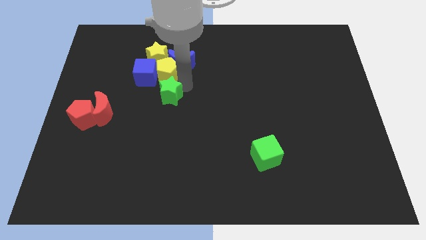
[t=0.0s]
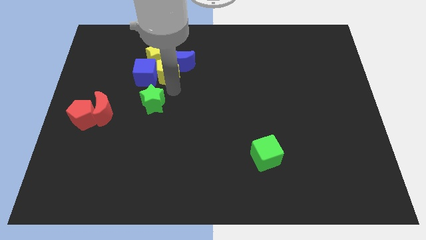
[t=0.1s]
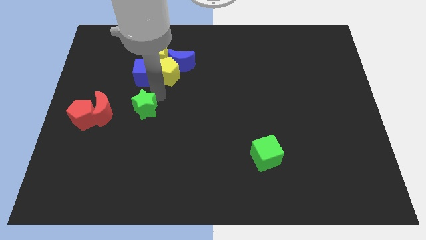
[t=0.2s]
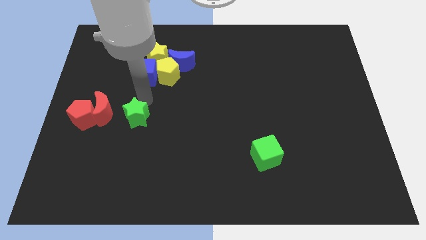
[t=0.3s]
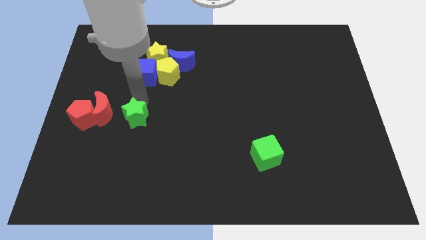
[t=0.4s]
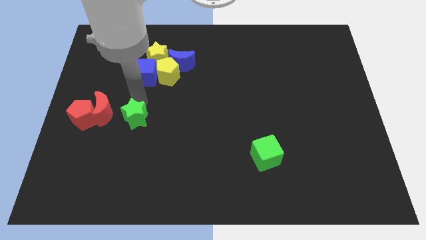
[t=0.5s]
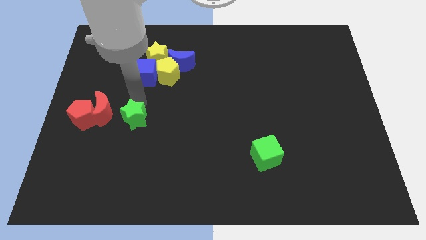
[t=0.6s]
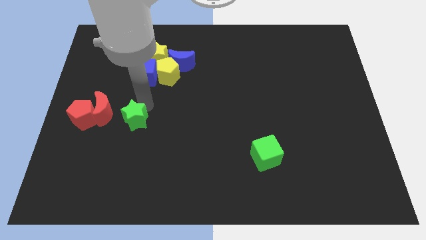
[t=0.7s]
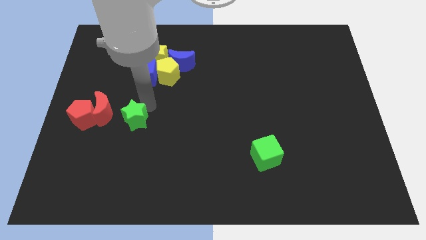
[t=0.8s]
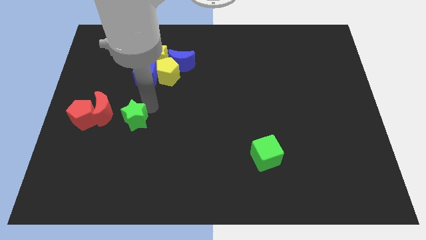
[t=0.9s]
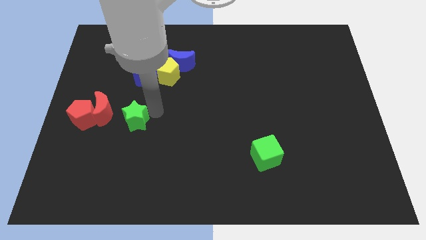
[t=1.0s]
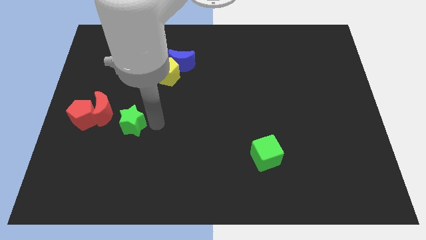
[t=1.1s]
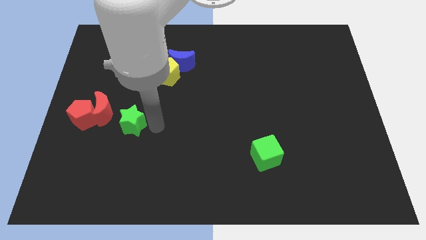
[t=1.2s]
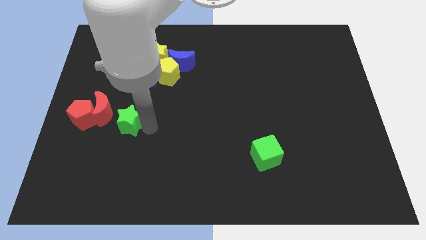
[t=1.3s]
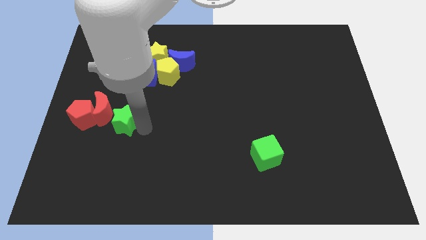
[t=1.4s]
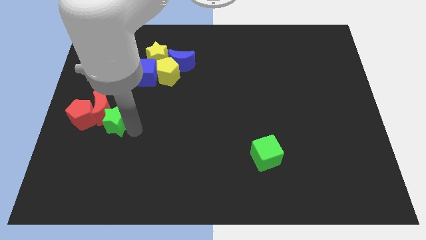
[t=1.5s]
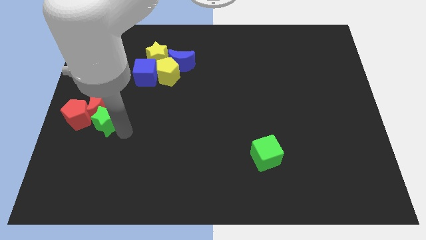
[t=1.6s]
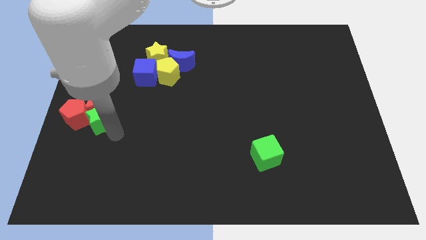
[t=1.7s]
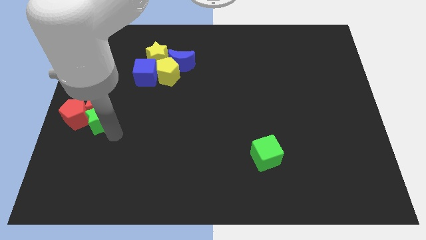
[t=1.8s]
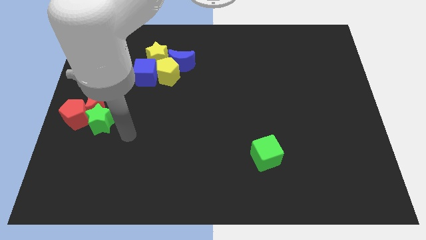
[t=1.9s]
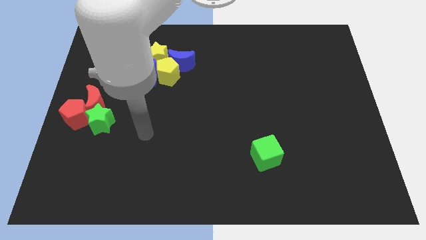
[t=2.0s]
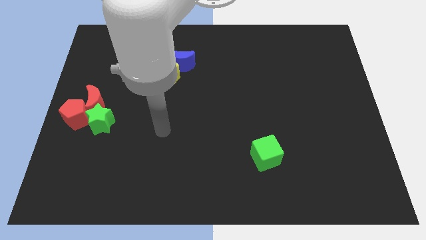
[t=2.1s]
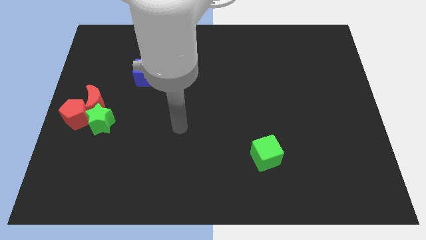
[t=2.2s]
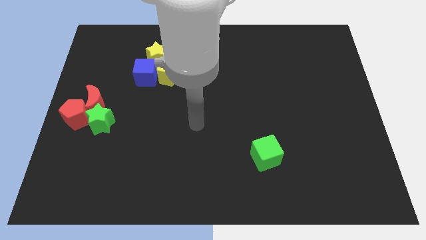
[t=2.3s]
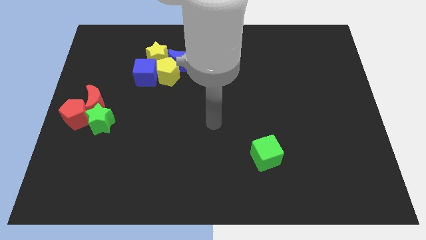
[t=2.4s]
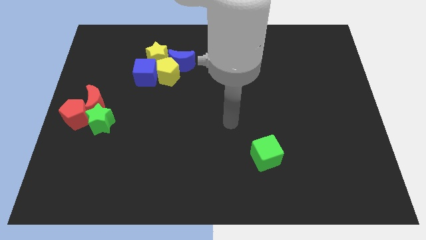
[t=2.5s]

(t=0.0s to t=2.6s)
move green star into red crescent

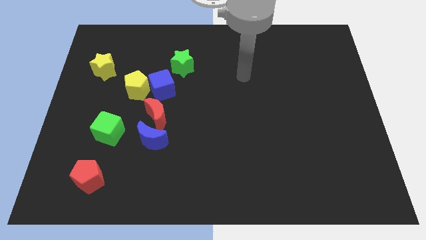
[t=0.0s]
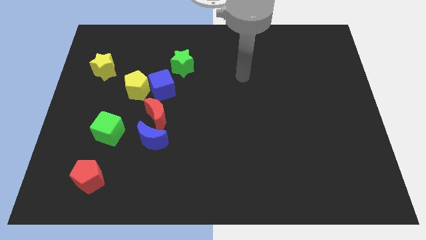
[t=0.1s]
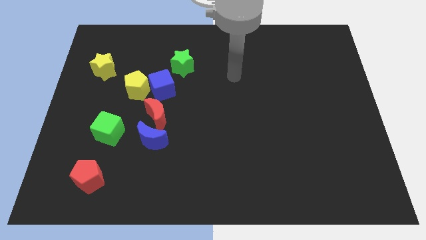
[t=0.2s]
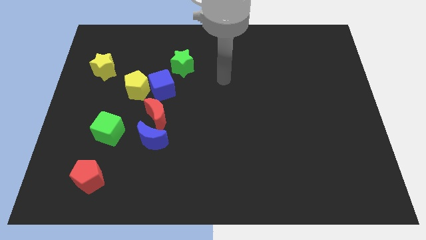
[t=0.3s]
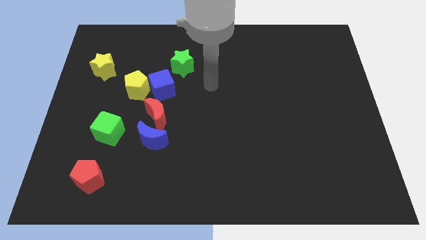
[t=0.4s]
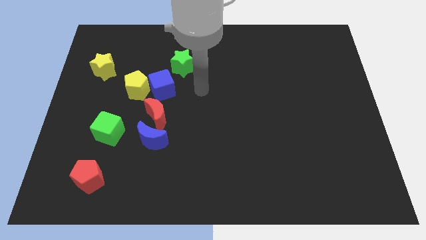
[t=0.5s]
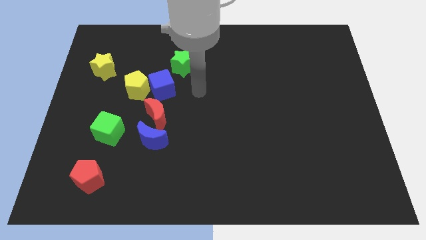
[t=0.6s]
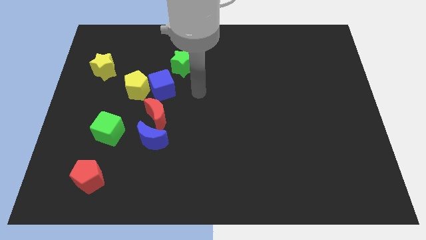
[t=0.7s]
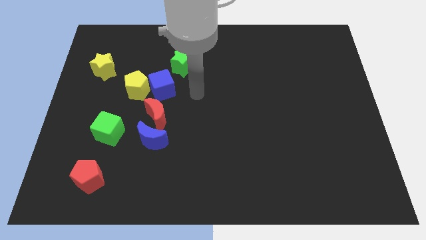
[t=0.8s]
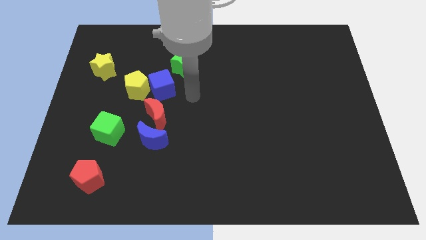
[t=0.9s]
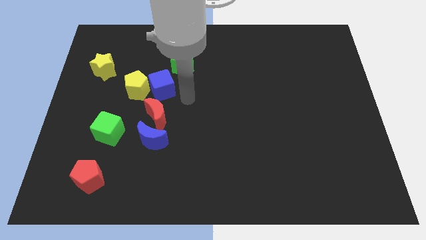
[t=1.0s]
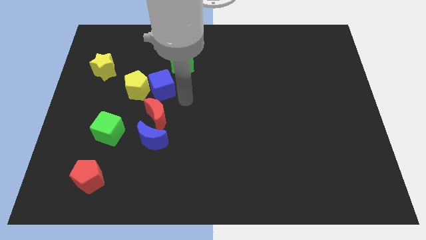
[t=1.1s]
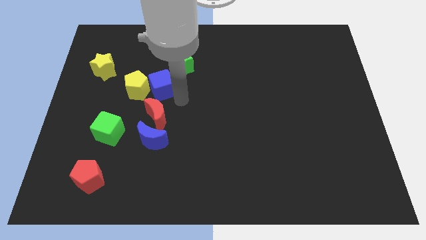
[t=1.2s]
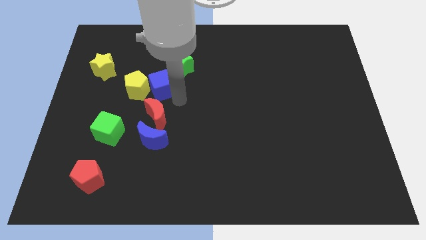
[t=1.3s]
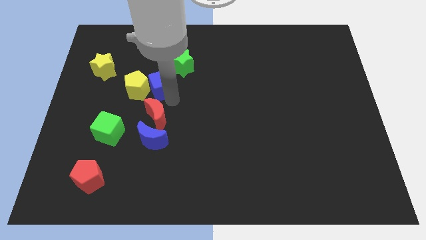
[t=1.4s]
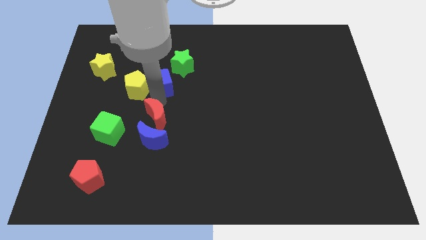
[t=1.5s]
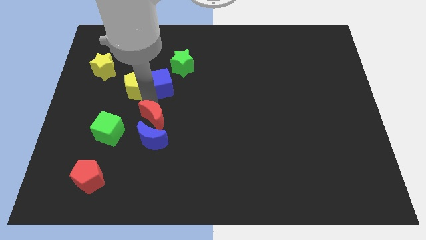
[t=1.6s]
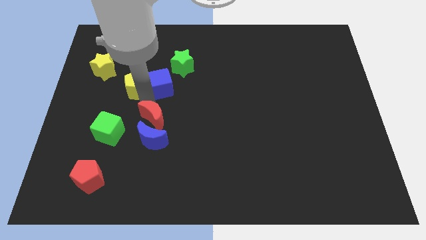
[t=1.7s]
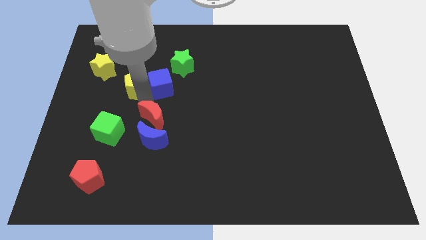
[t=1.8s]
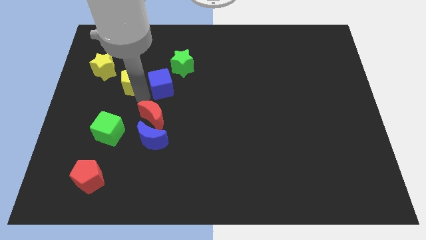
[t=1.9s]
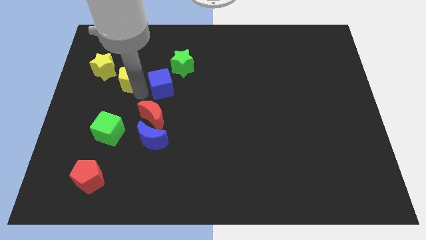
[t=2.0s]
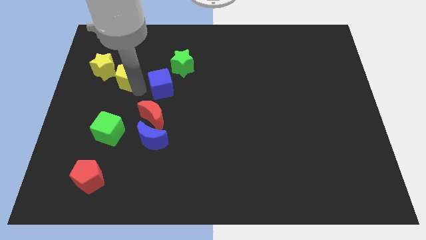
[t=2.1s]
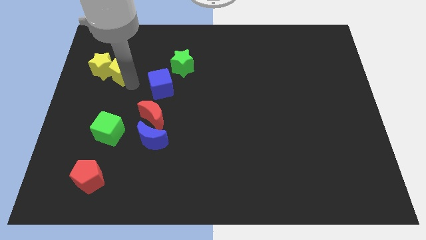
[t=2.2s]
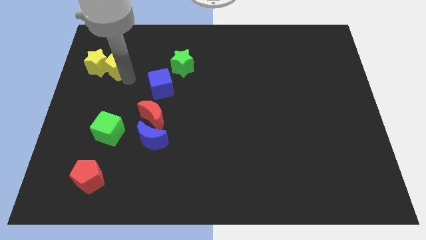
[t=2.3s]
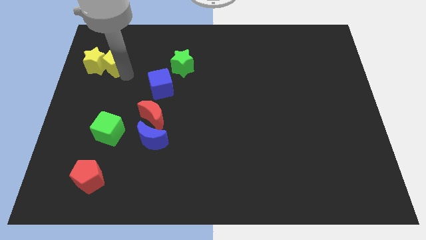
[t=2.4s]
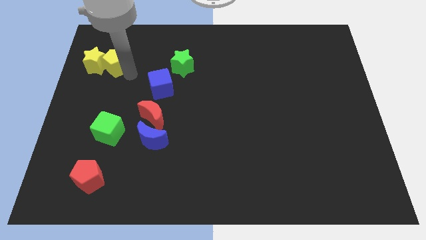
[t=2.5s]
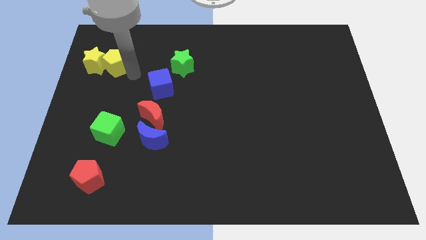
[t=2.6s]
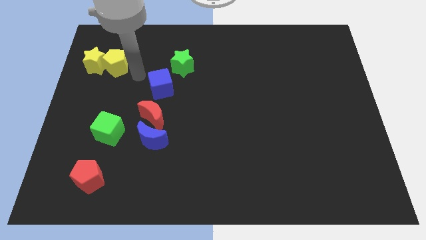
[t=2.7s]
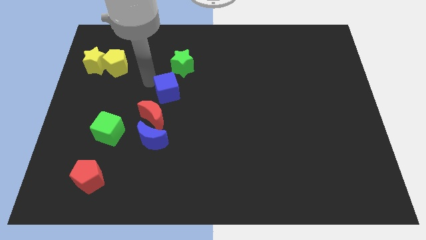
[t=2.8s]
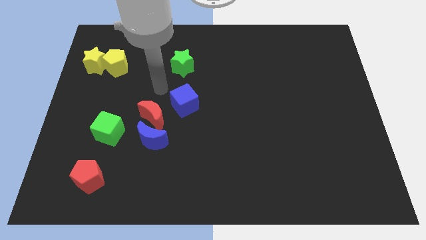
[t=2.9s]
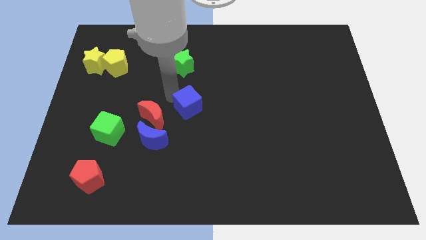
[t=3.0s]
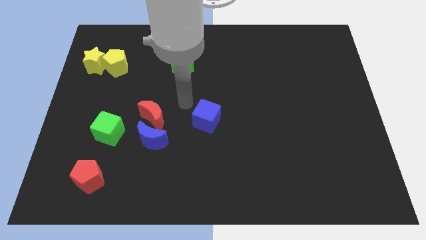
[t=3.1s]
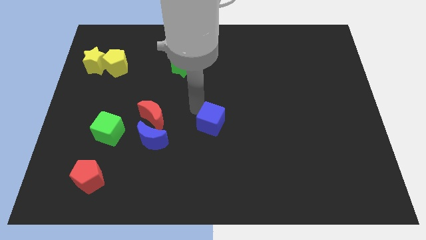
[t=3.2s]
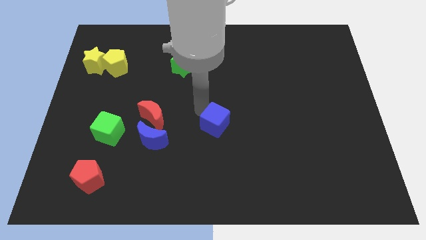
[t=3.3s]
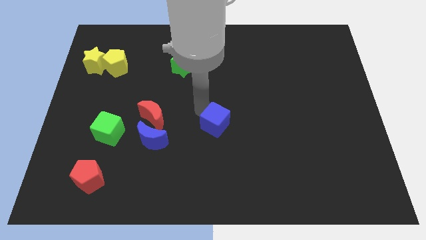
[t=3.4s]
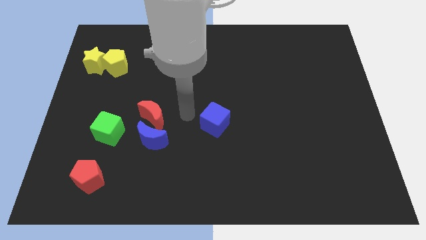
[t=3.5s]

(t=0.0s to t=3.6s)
move blue cube to the center

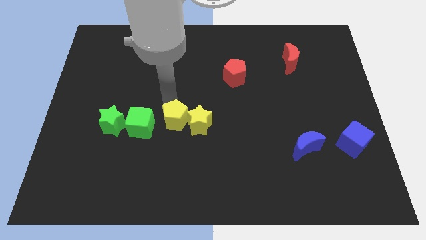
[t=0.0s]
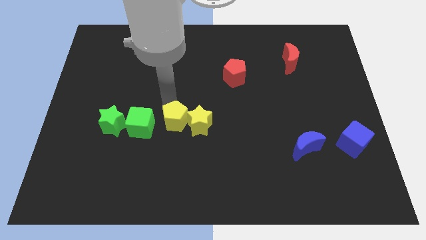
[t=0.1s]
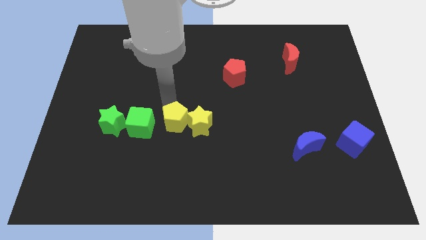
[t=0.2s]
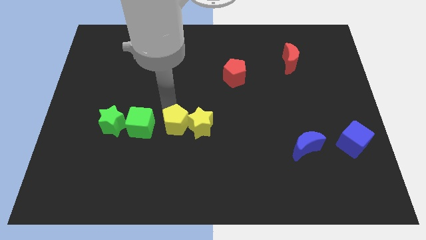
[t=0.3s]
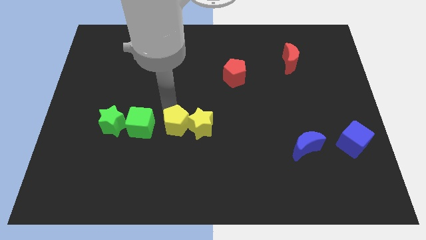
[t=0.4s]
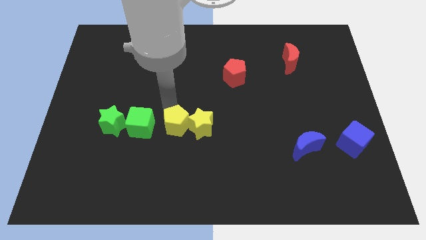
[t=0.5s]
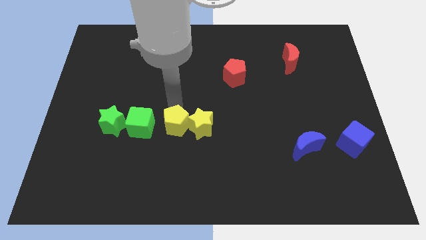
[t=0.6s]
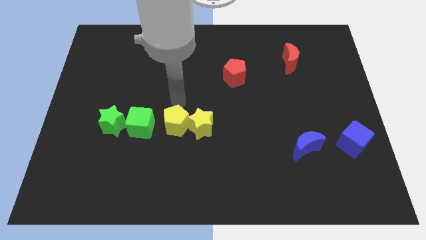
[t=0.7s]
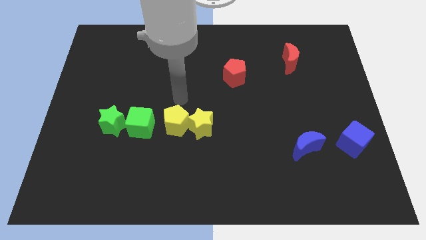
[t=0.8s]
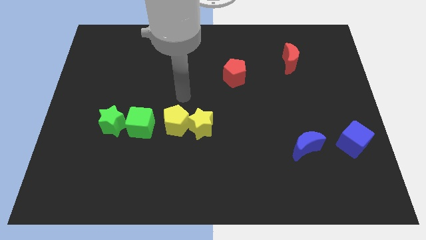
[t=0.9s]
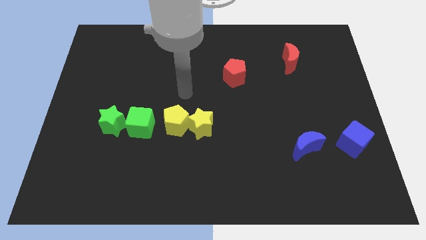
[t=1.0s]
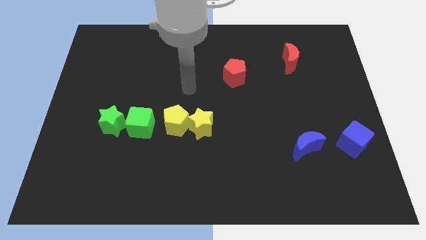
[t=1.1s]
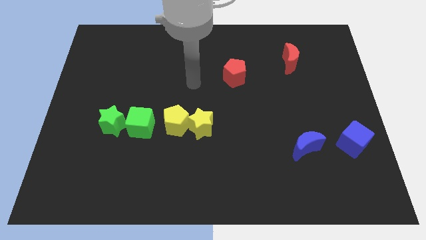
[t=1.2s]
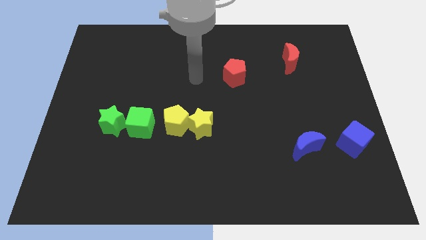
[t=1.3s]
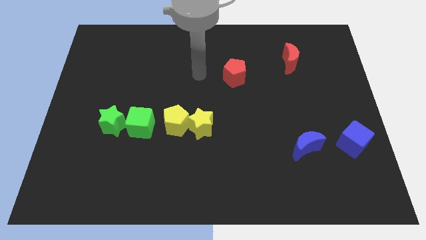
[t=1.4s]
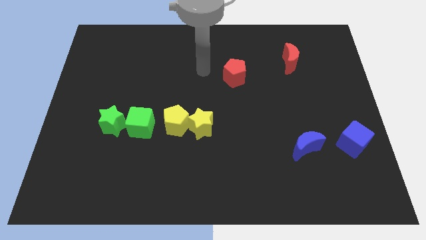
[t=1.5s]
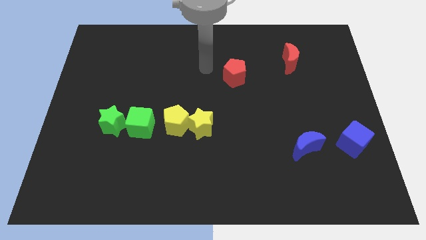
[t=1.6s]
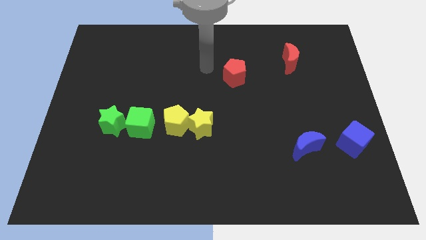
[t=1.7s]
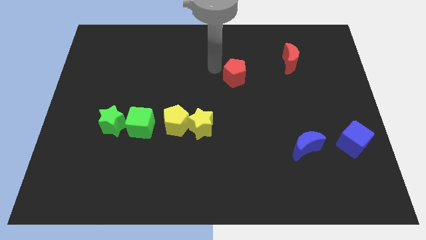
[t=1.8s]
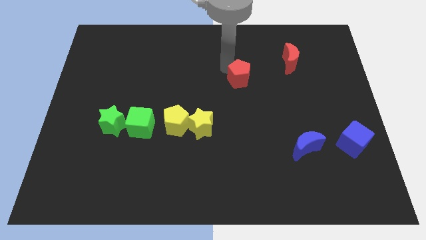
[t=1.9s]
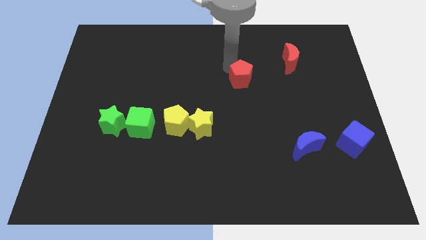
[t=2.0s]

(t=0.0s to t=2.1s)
push yellow pentagon between yellow star and green cube

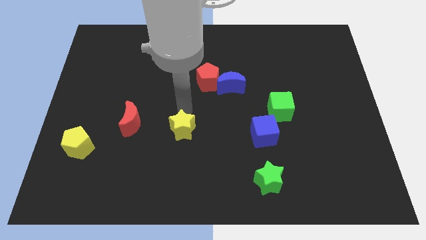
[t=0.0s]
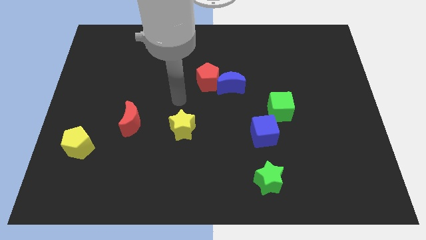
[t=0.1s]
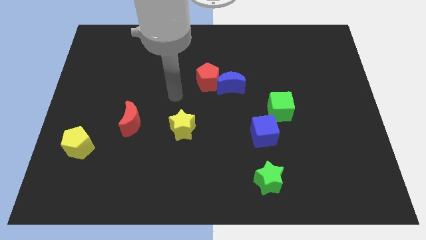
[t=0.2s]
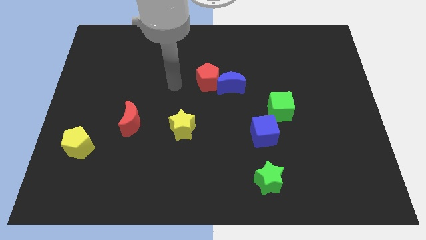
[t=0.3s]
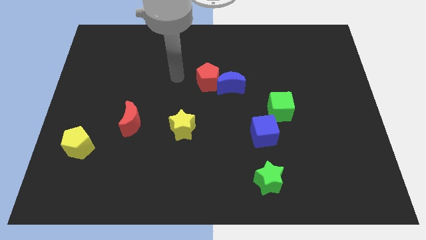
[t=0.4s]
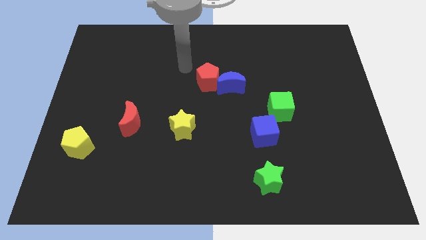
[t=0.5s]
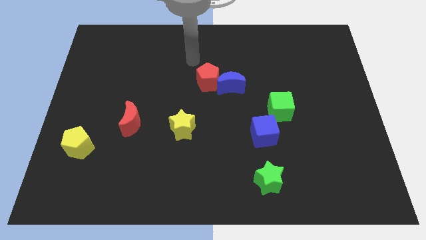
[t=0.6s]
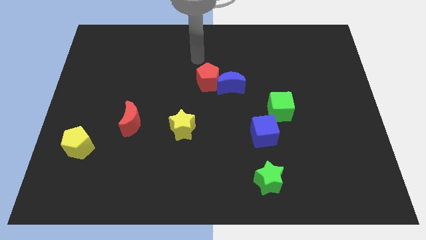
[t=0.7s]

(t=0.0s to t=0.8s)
move the arm away from the yellow star
